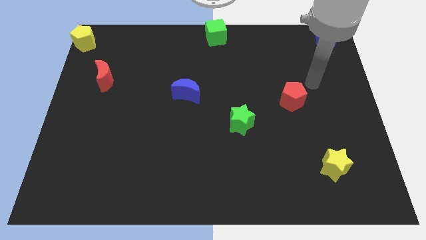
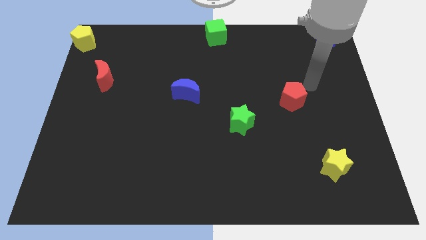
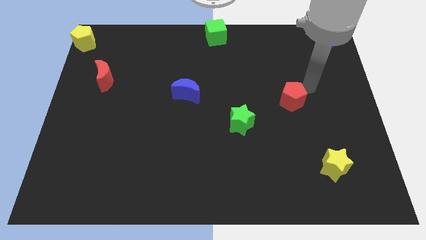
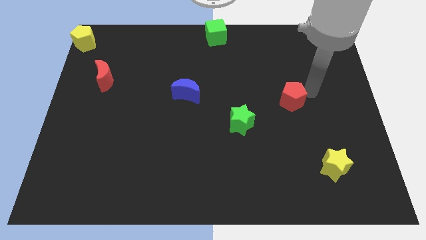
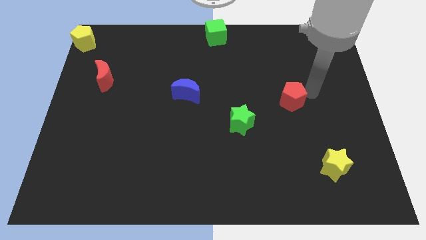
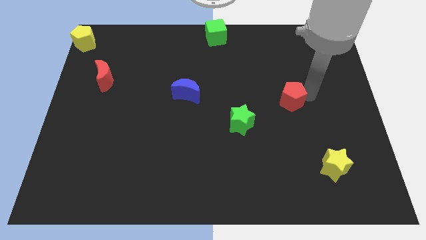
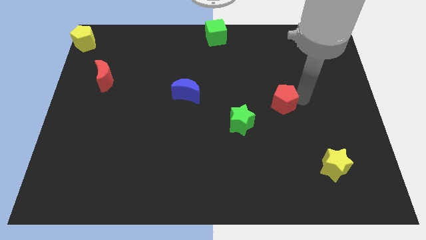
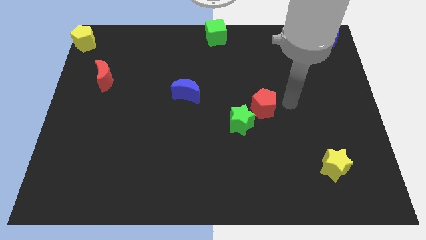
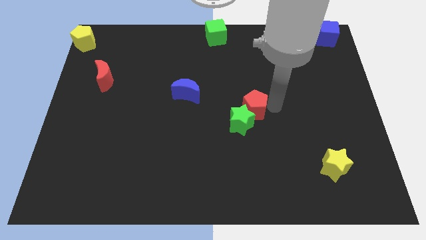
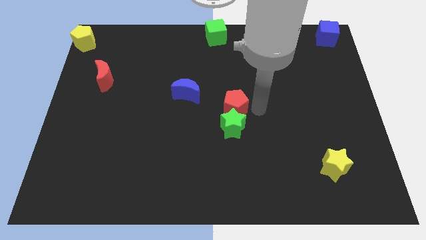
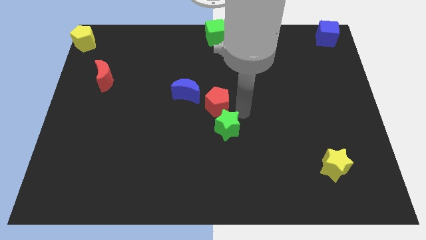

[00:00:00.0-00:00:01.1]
push the red pentagon into the green star

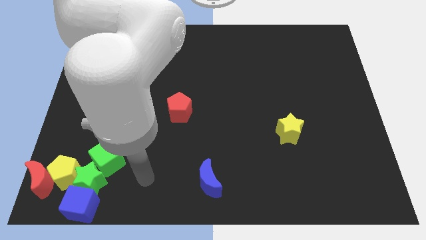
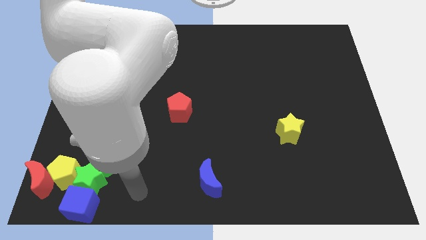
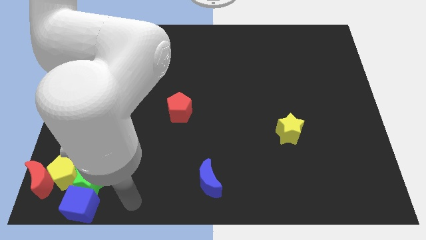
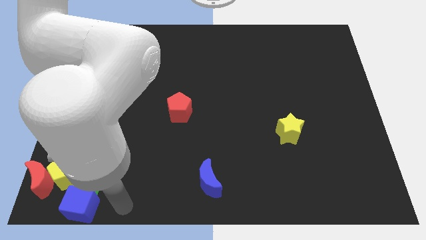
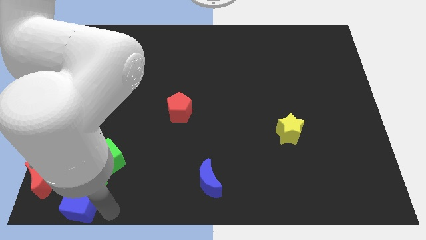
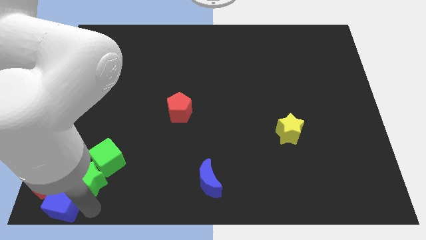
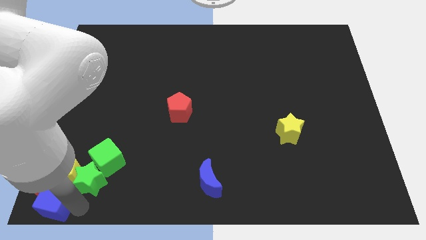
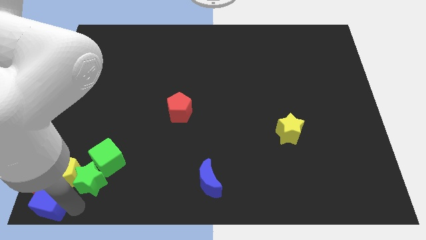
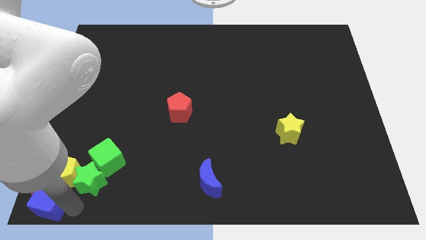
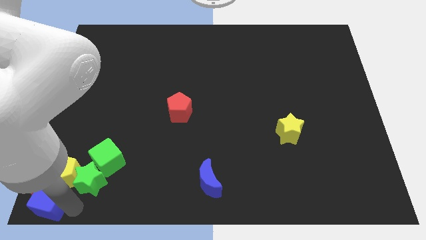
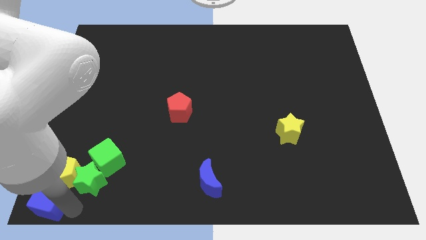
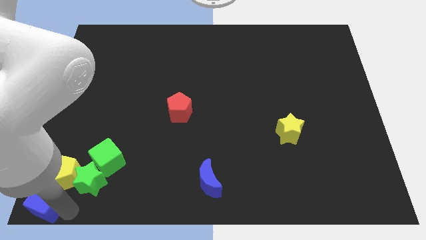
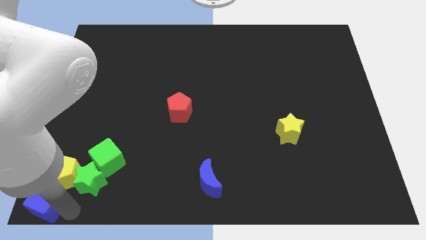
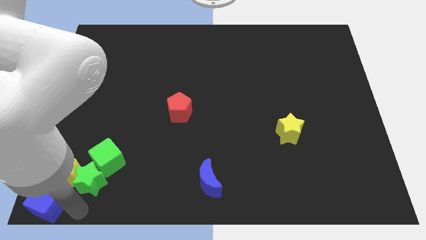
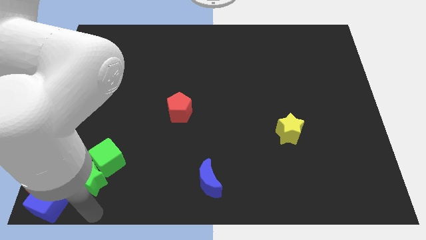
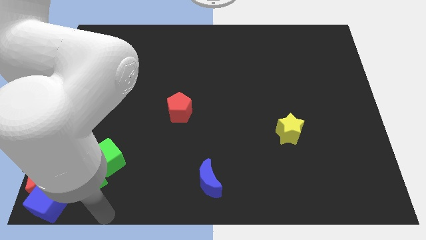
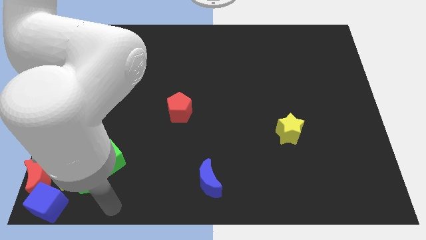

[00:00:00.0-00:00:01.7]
push the blue cube towards the bottom left corner of the board

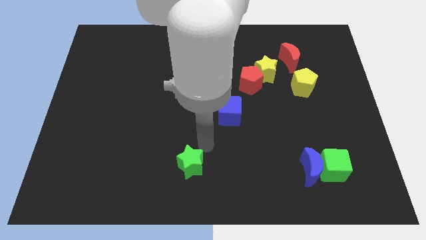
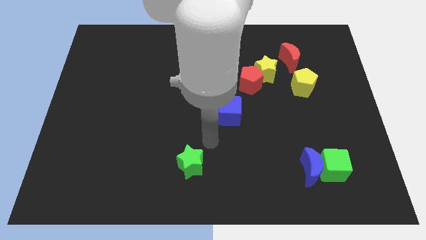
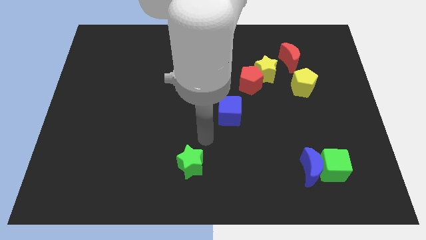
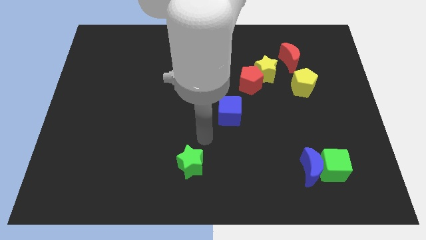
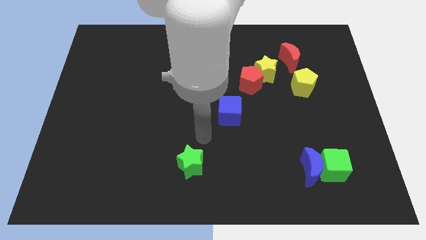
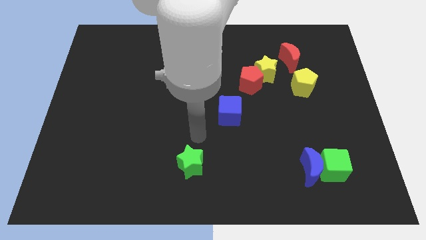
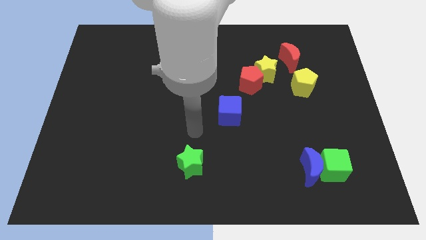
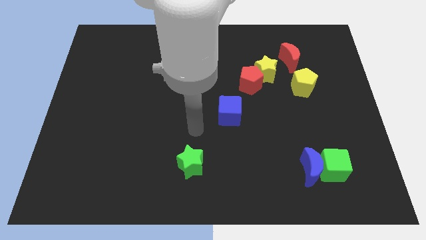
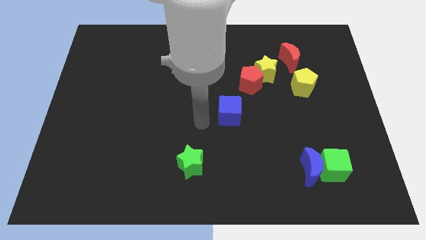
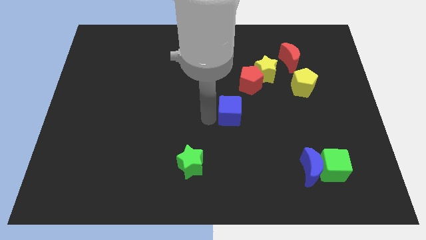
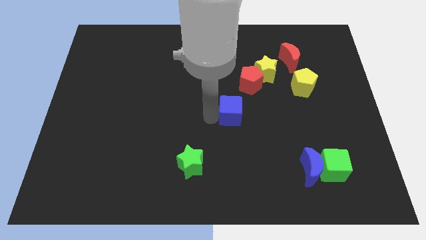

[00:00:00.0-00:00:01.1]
touch the blue cube

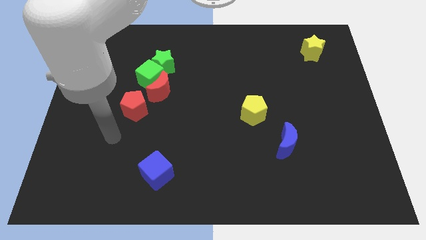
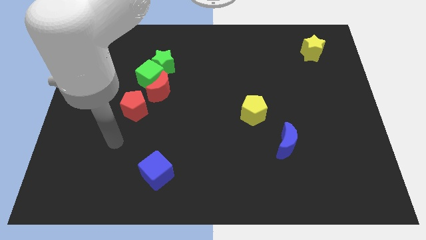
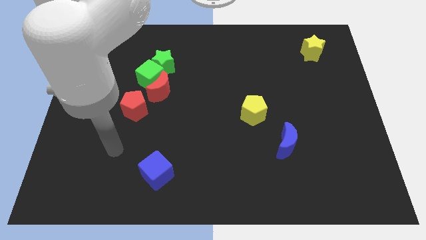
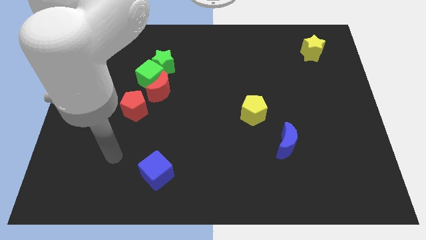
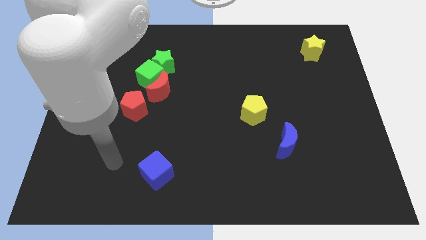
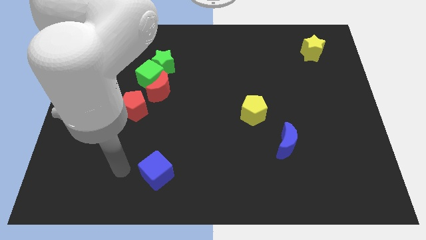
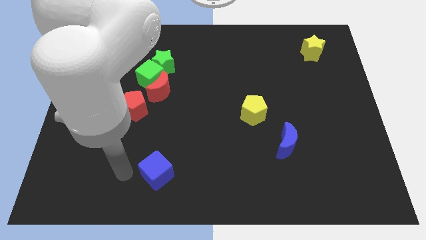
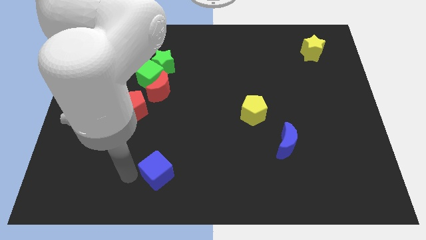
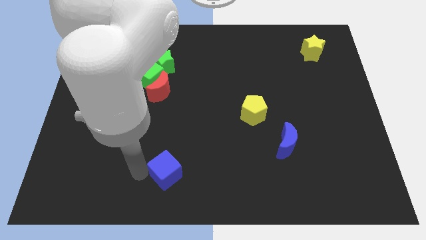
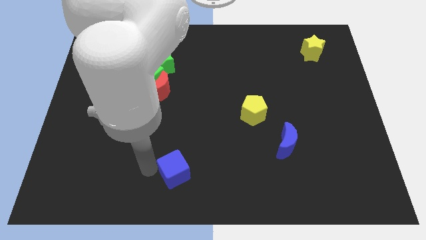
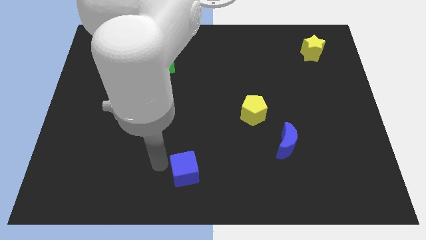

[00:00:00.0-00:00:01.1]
slightly move blue cube to the right

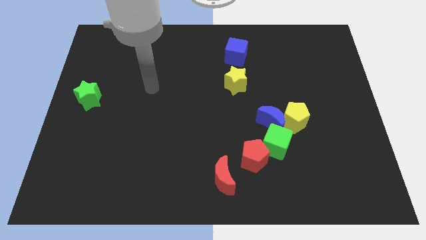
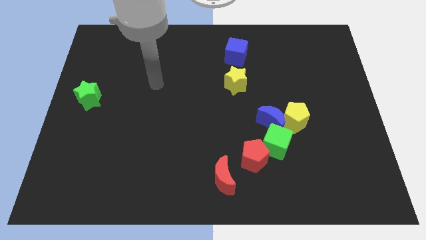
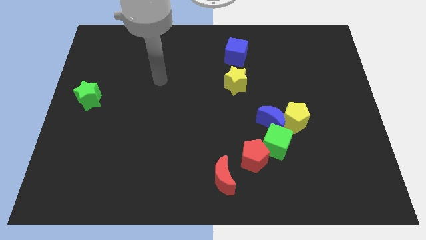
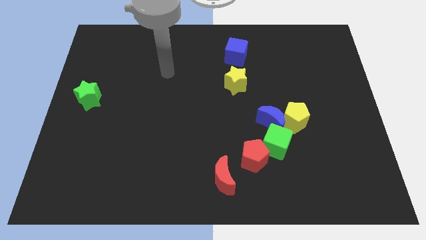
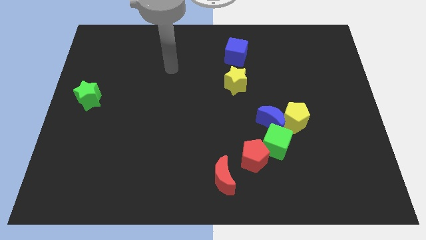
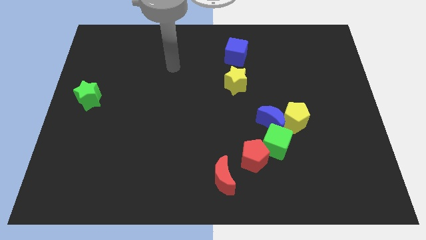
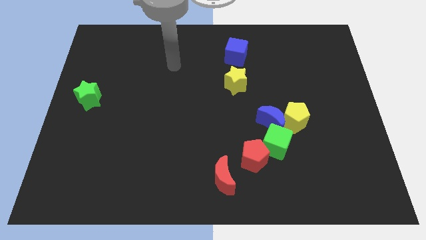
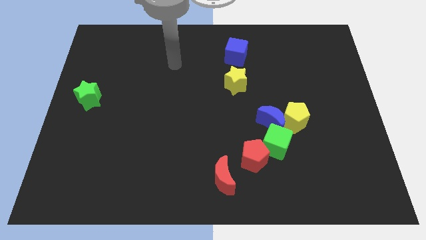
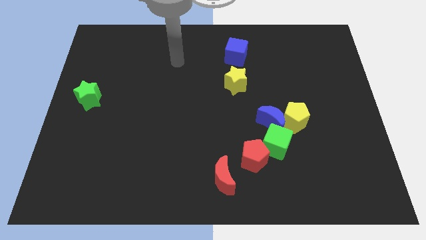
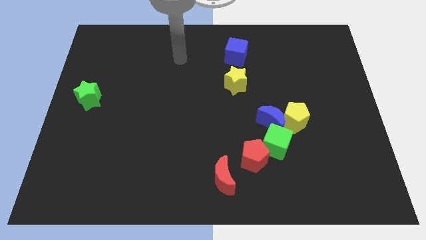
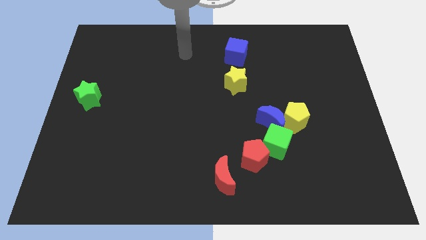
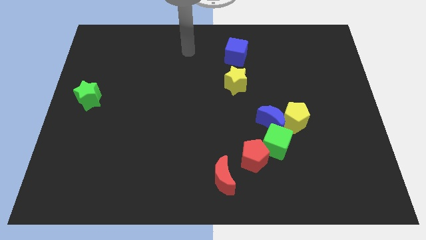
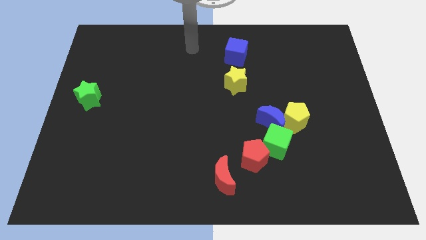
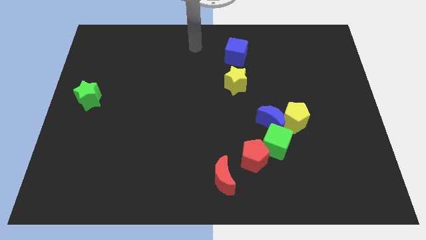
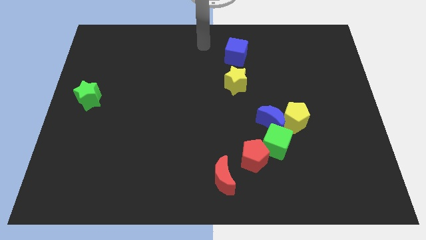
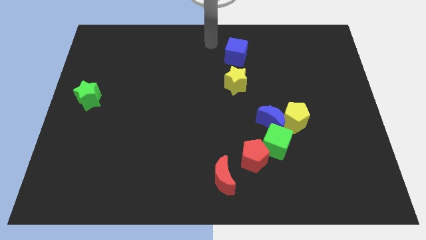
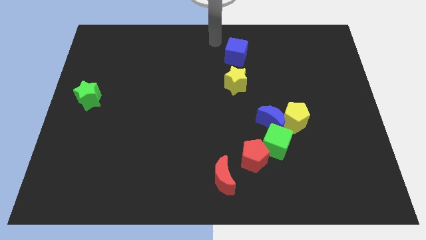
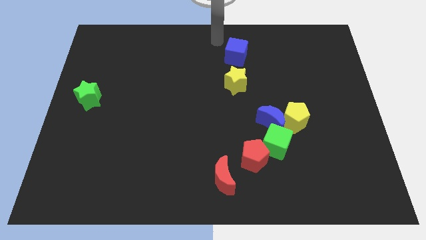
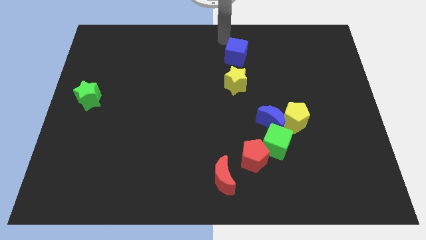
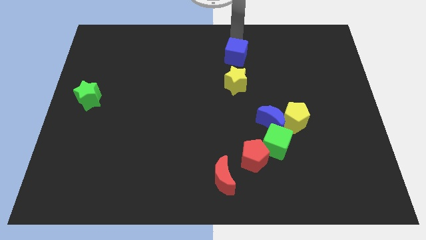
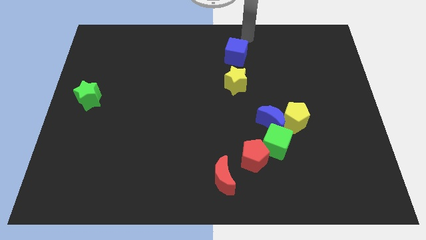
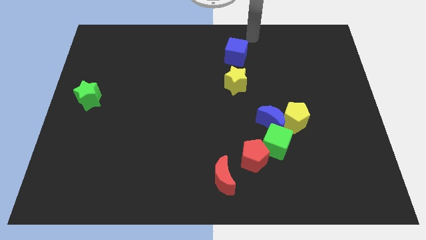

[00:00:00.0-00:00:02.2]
move the arm to the top of the blue cube

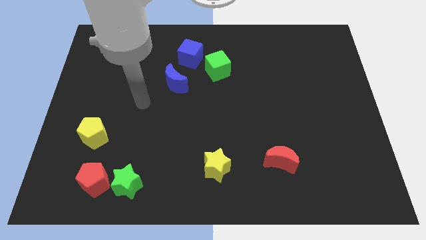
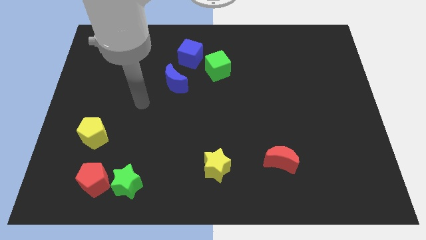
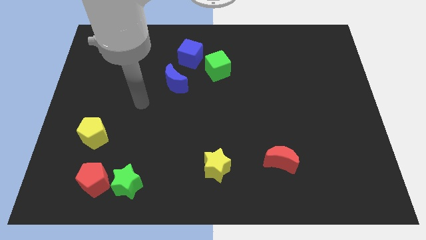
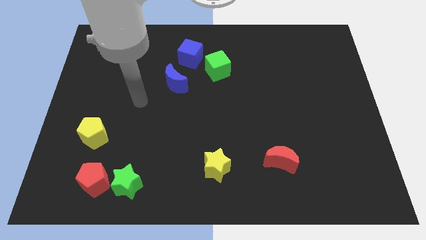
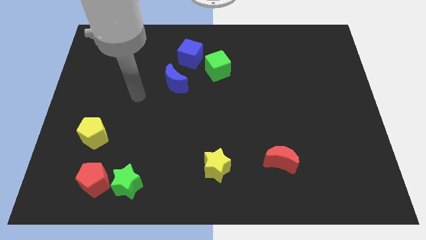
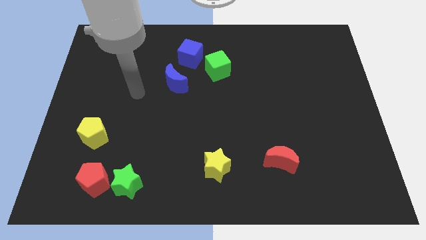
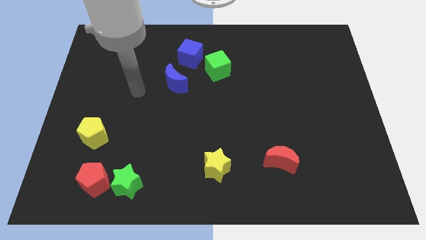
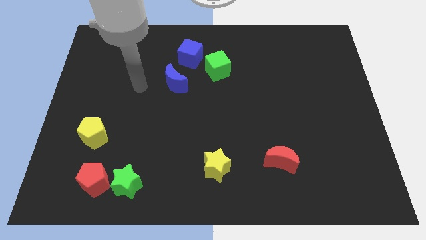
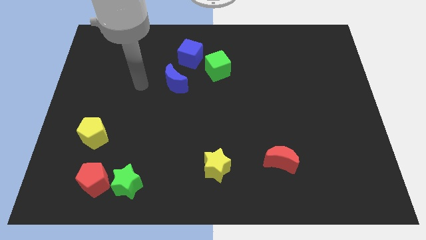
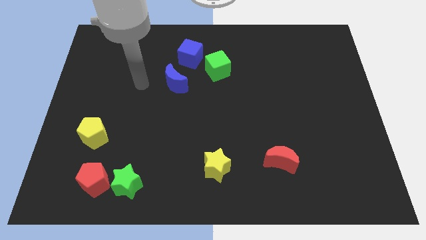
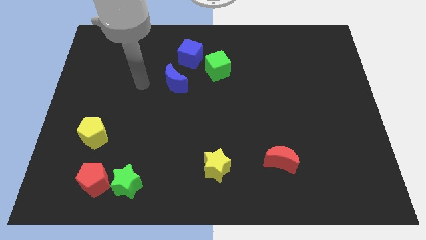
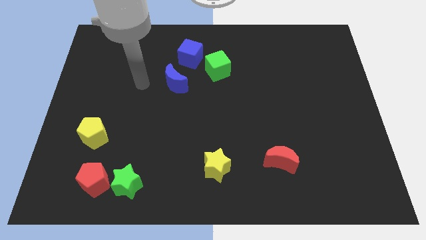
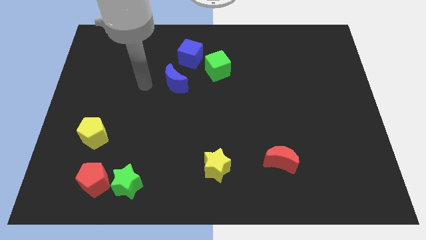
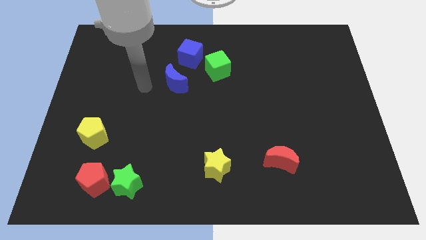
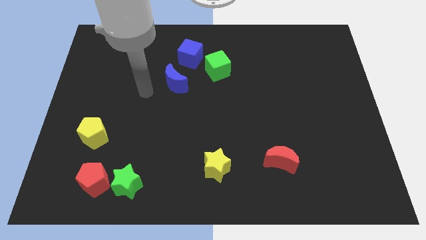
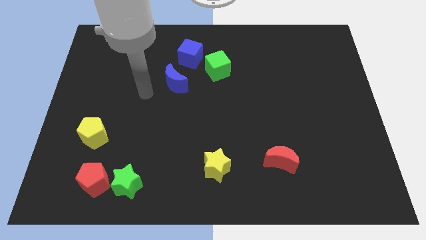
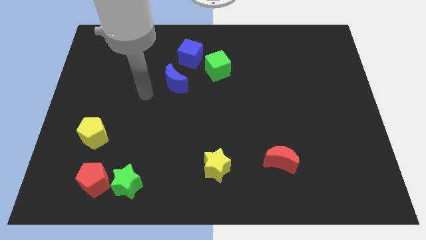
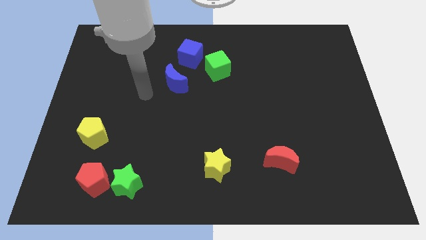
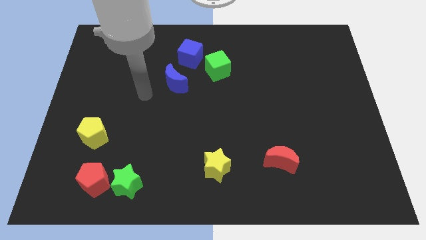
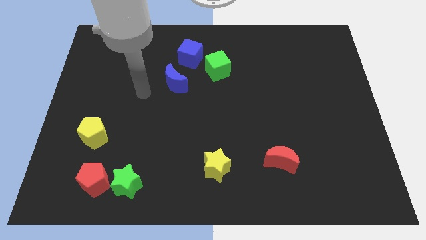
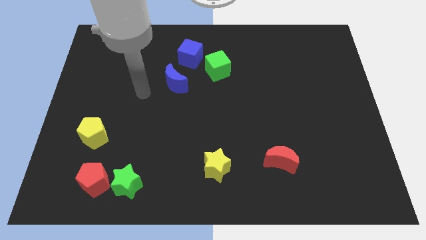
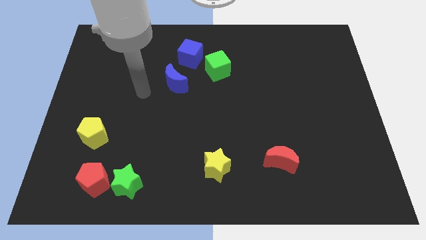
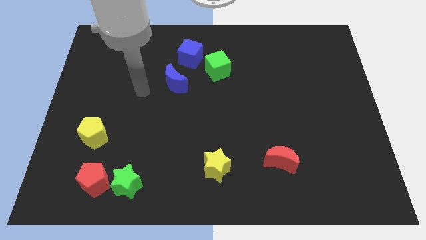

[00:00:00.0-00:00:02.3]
move your hand slightly up
